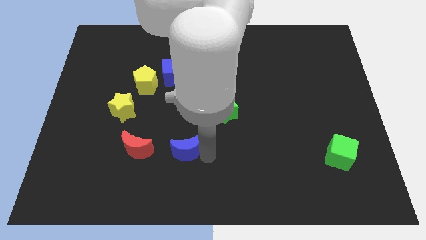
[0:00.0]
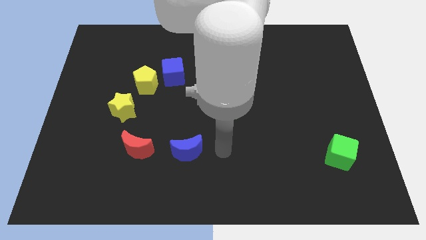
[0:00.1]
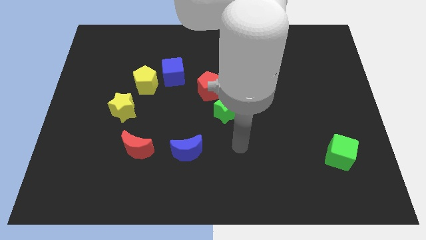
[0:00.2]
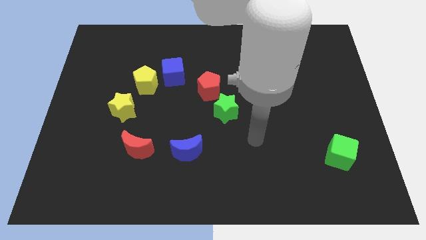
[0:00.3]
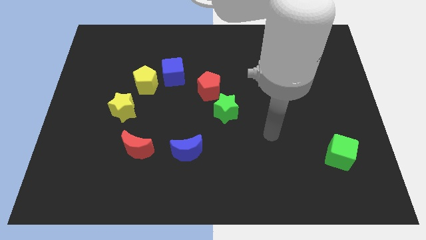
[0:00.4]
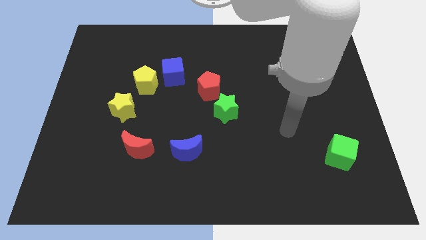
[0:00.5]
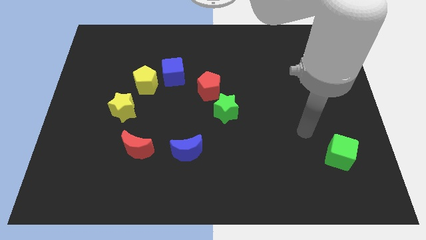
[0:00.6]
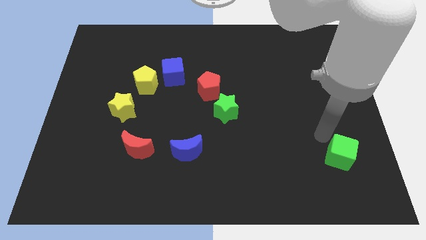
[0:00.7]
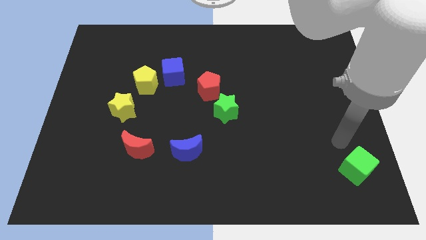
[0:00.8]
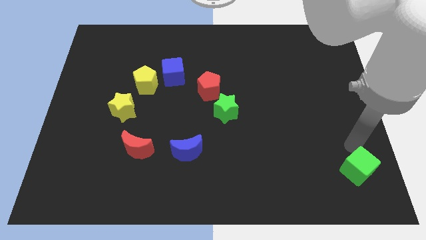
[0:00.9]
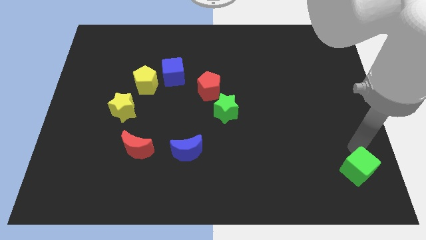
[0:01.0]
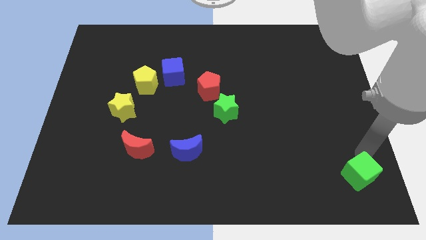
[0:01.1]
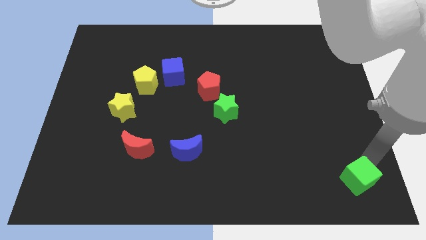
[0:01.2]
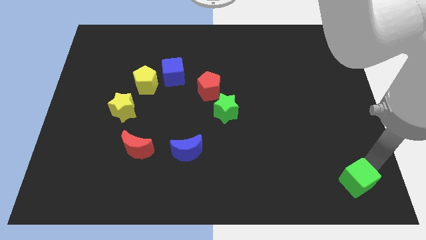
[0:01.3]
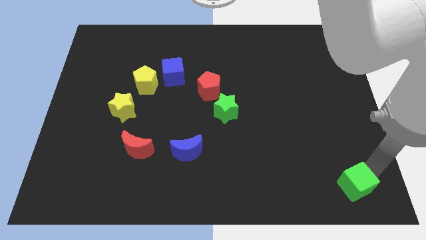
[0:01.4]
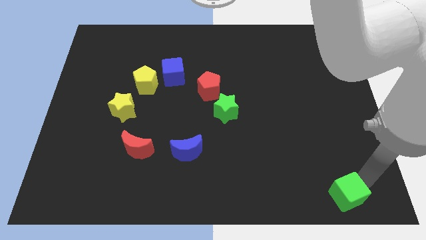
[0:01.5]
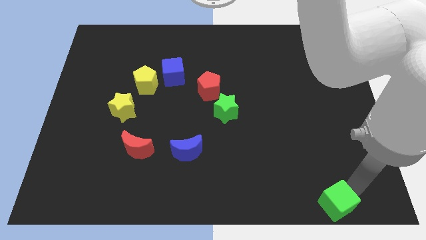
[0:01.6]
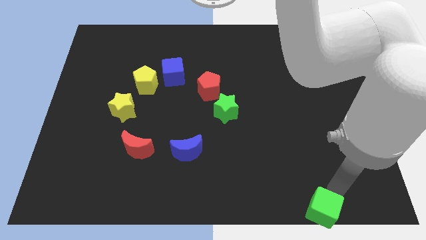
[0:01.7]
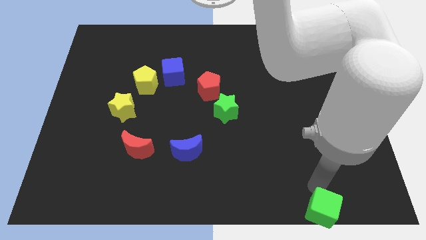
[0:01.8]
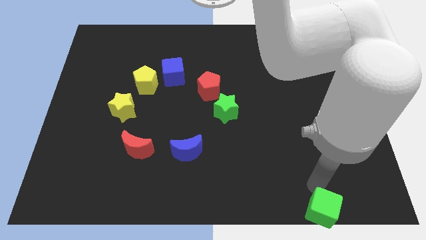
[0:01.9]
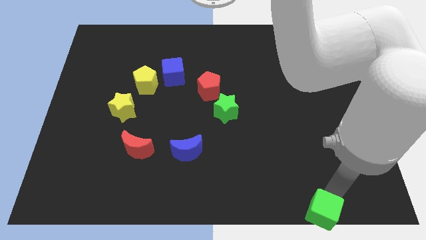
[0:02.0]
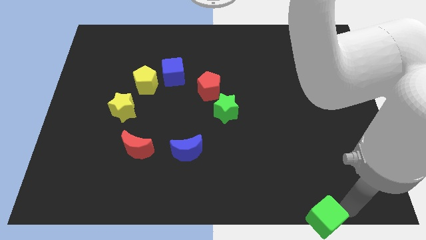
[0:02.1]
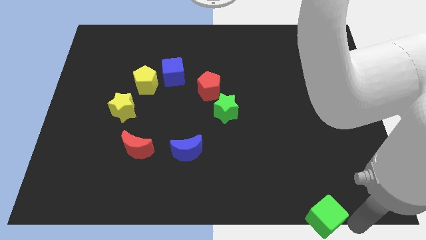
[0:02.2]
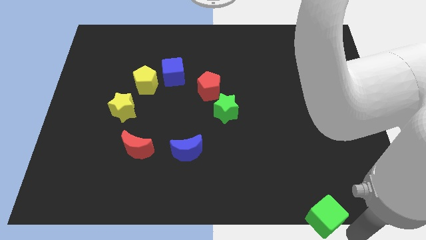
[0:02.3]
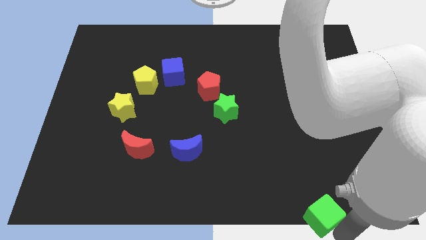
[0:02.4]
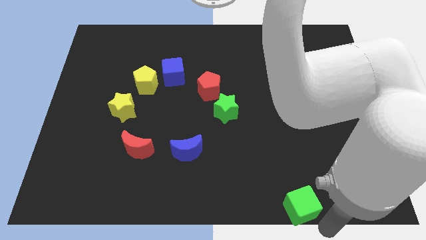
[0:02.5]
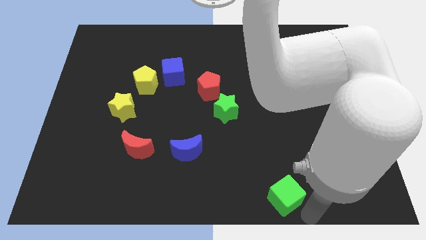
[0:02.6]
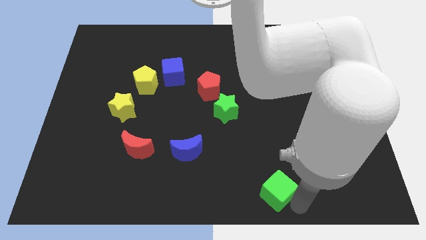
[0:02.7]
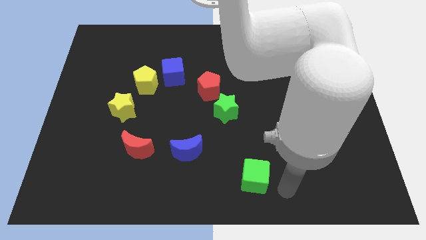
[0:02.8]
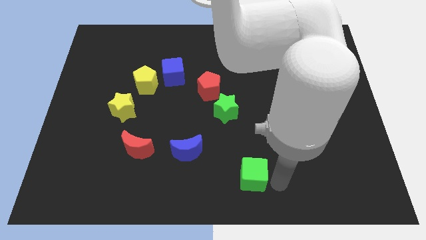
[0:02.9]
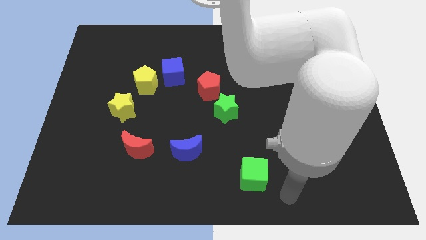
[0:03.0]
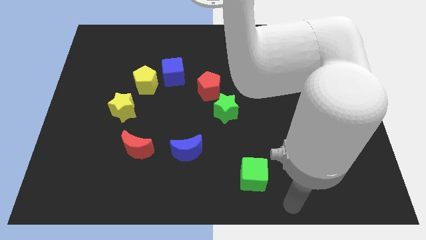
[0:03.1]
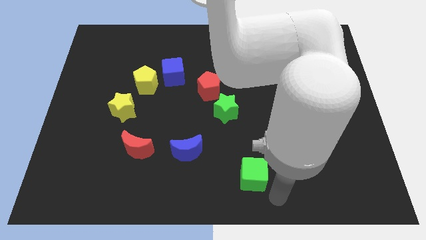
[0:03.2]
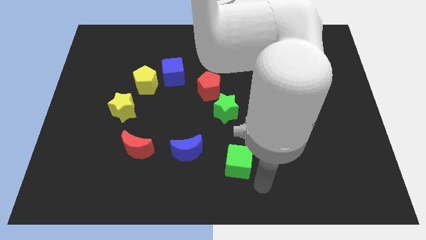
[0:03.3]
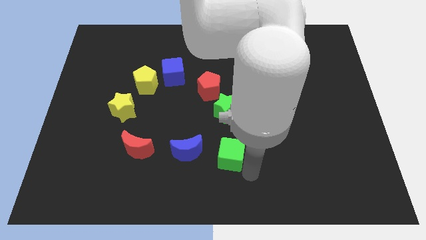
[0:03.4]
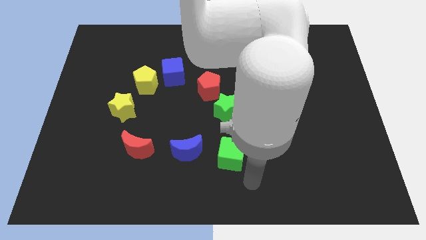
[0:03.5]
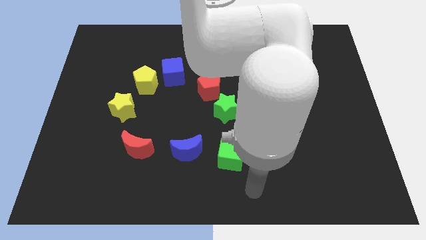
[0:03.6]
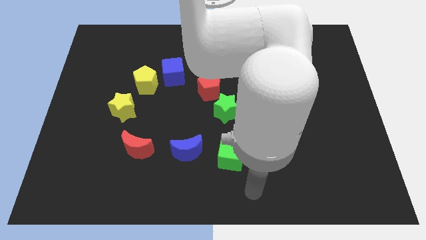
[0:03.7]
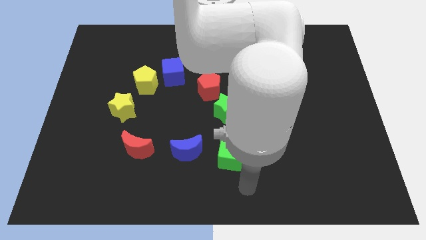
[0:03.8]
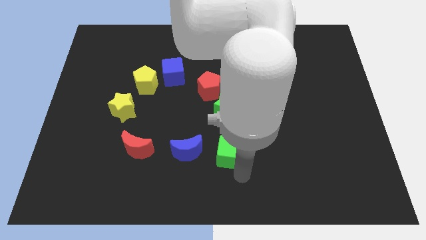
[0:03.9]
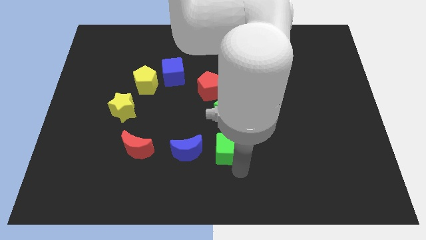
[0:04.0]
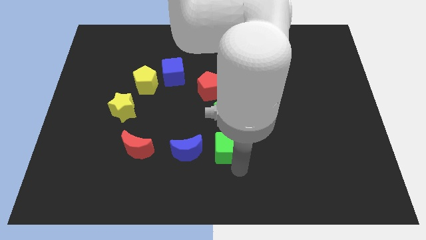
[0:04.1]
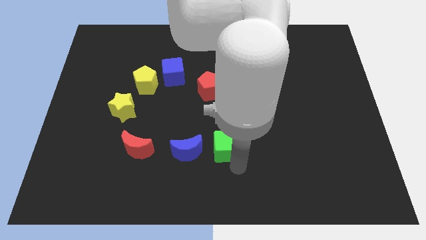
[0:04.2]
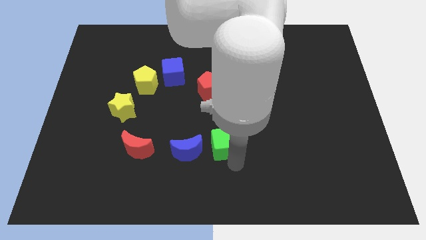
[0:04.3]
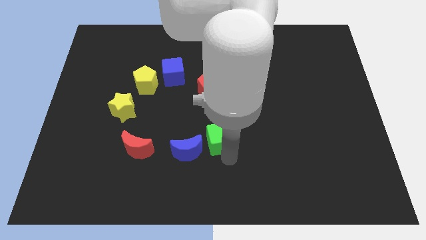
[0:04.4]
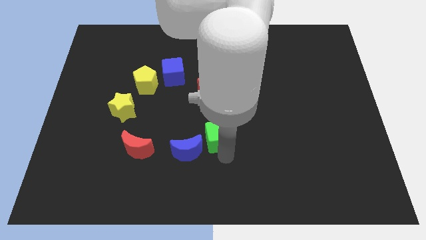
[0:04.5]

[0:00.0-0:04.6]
move the green cube to the right of blue crescent
